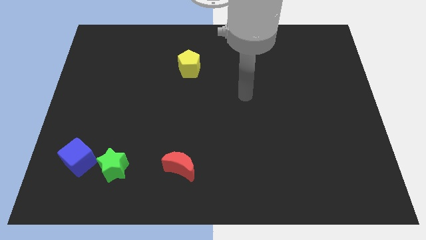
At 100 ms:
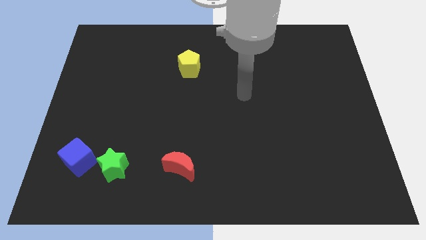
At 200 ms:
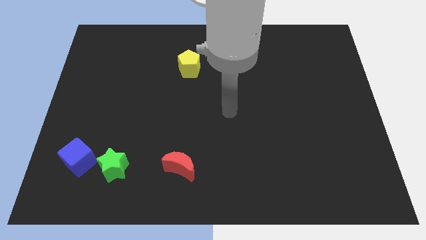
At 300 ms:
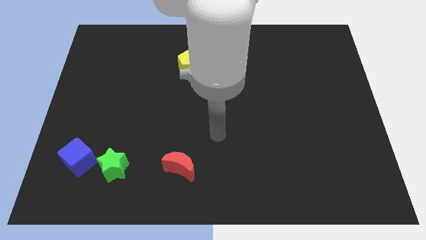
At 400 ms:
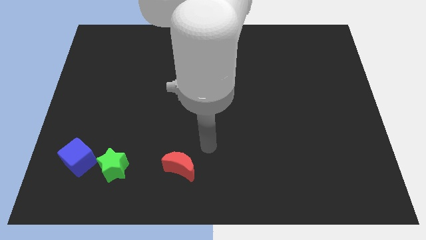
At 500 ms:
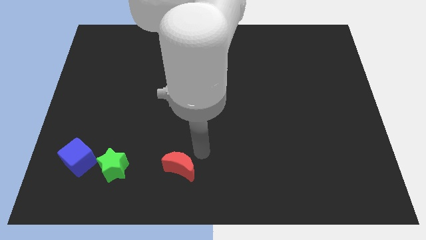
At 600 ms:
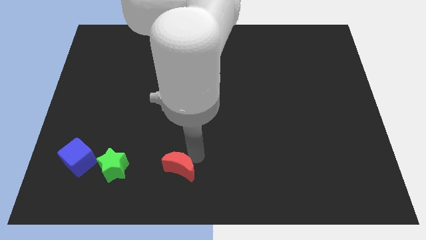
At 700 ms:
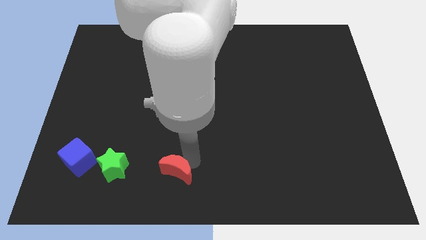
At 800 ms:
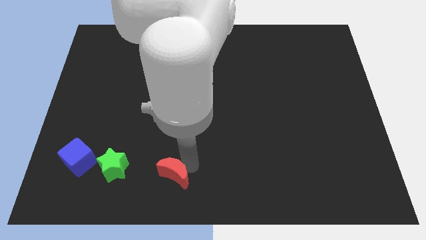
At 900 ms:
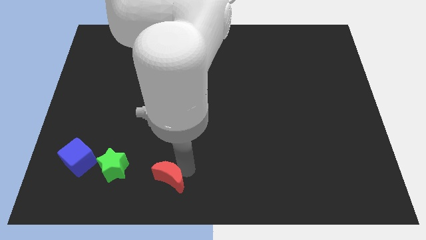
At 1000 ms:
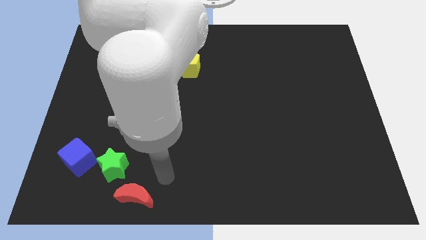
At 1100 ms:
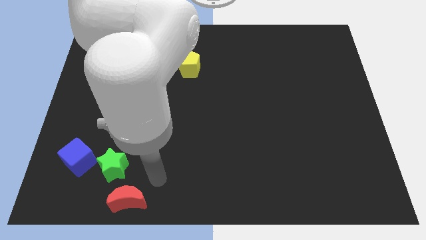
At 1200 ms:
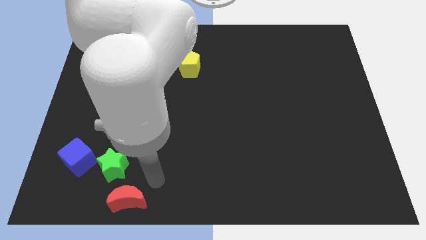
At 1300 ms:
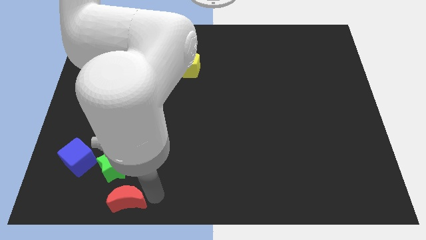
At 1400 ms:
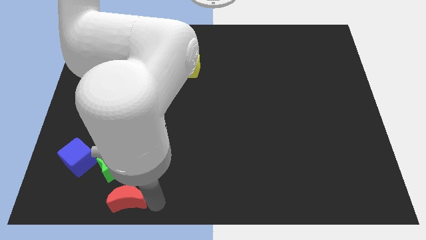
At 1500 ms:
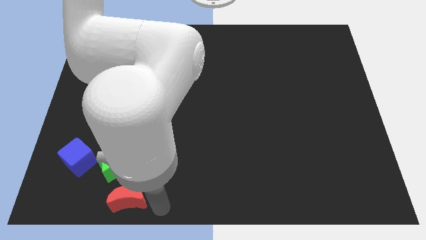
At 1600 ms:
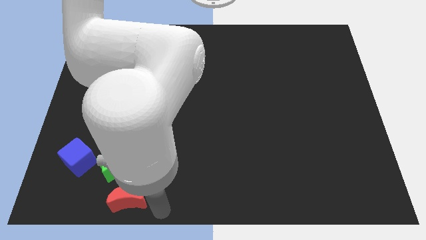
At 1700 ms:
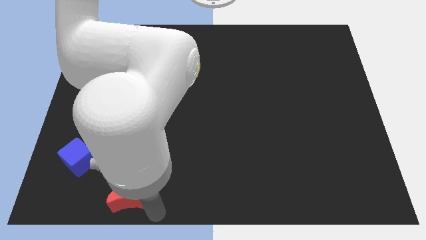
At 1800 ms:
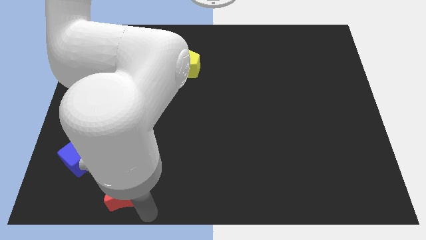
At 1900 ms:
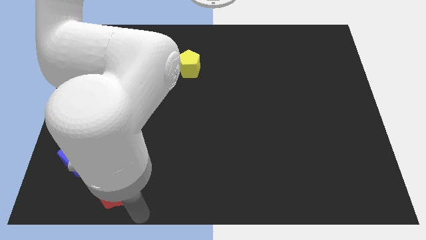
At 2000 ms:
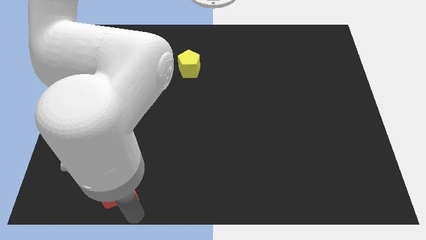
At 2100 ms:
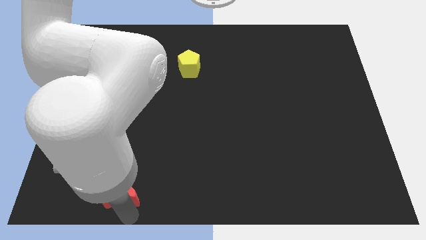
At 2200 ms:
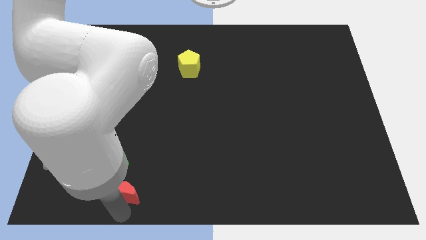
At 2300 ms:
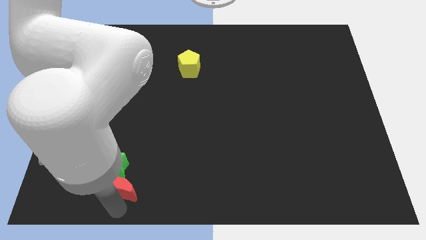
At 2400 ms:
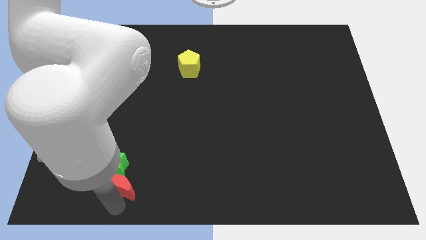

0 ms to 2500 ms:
put the red block next to the star

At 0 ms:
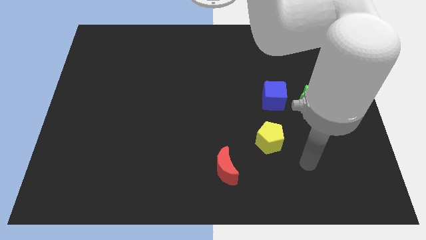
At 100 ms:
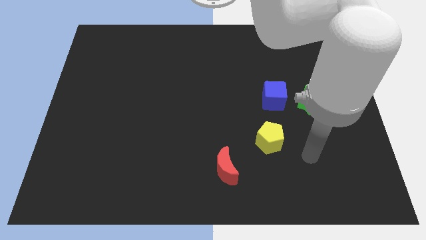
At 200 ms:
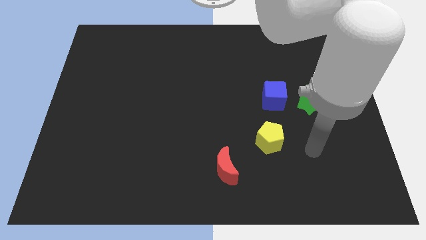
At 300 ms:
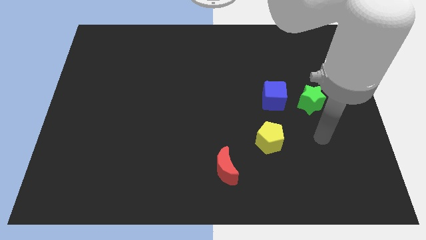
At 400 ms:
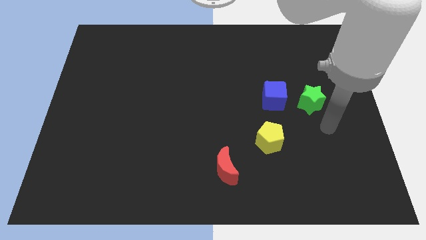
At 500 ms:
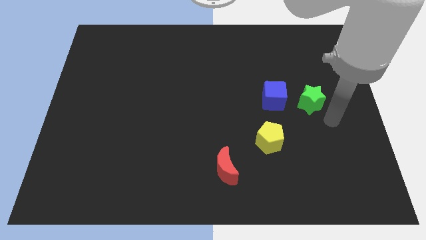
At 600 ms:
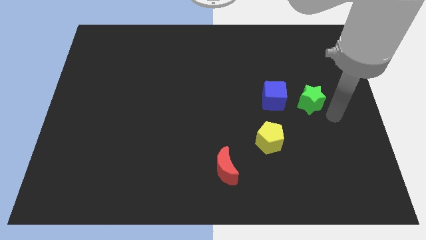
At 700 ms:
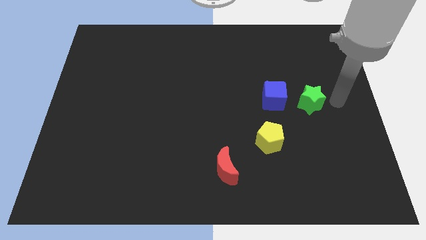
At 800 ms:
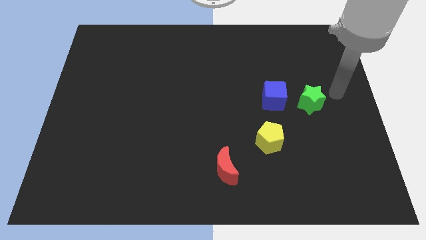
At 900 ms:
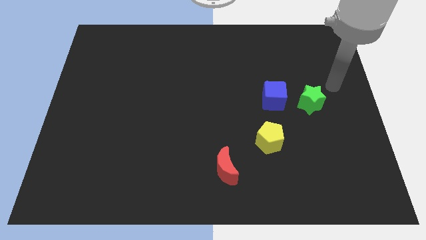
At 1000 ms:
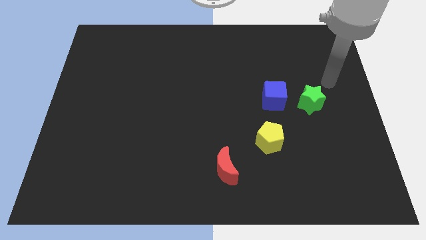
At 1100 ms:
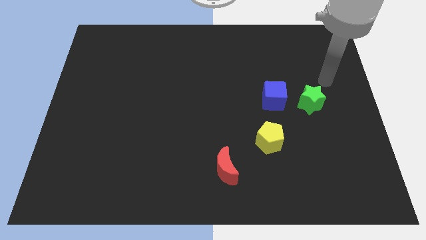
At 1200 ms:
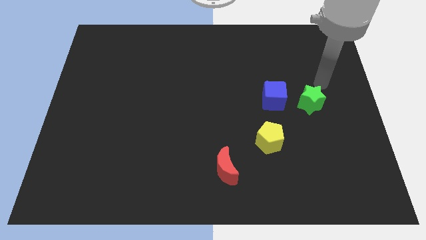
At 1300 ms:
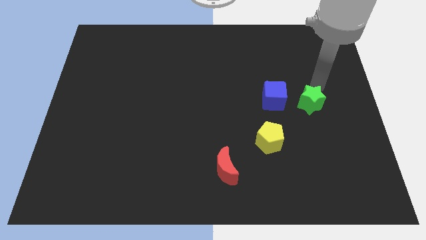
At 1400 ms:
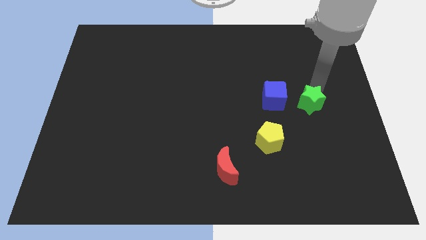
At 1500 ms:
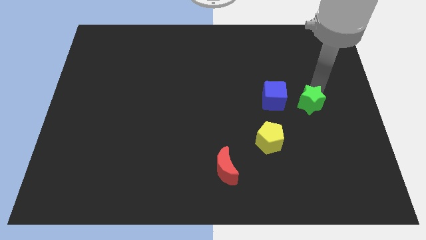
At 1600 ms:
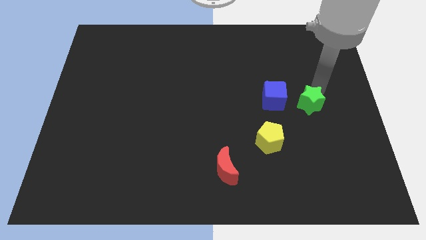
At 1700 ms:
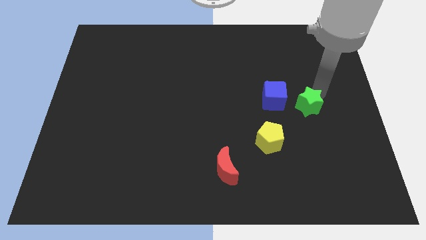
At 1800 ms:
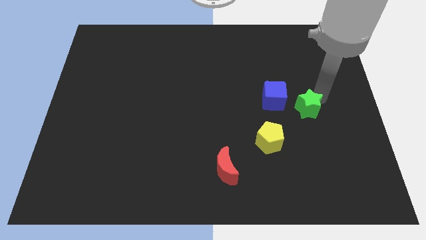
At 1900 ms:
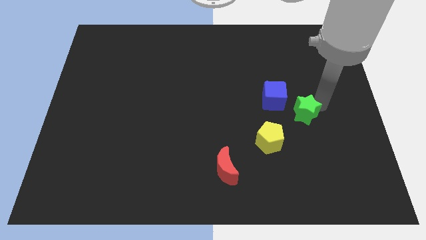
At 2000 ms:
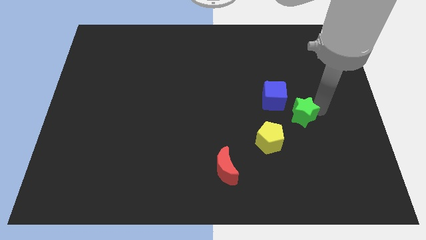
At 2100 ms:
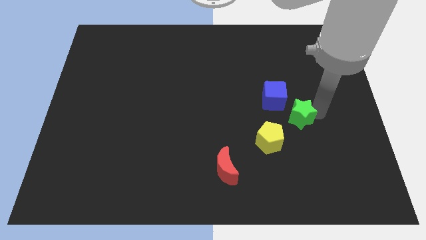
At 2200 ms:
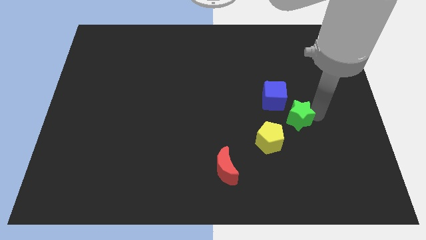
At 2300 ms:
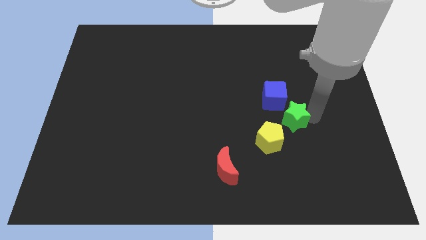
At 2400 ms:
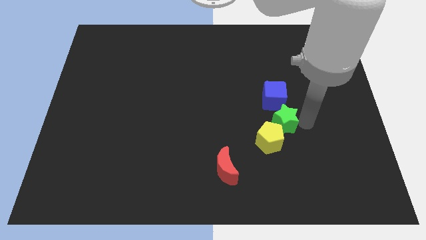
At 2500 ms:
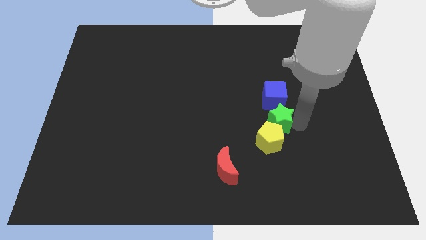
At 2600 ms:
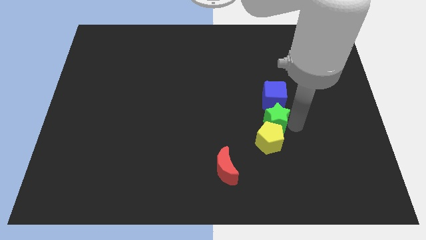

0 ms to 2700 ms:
push the green block towards the yellow block

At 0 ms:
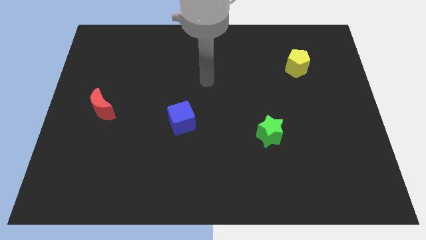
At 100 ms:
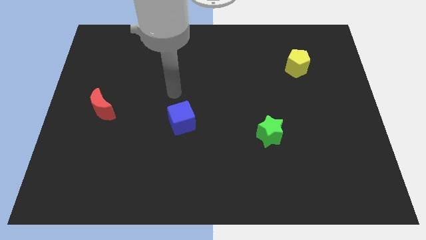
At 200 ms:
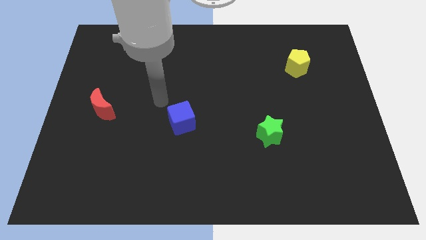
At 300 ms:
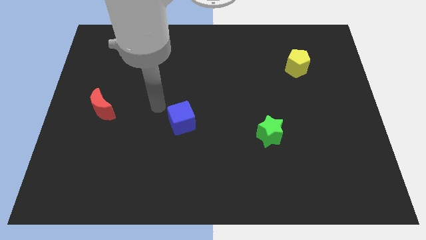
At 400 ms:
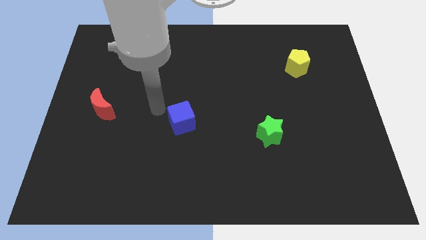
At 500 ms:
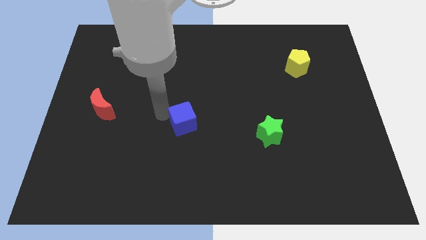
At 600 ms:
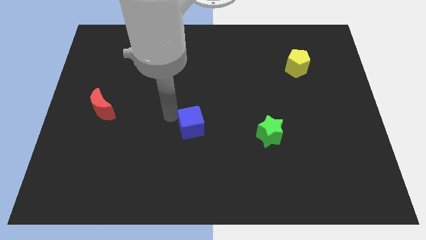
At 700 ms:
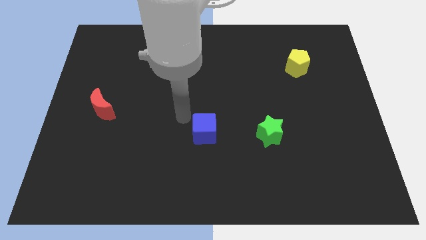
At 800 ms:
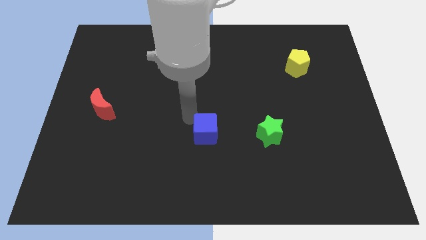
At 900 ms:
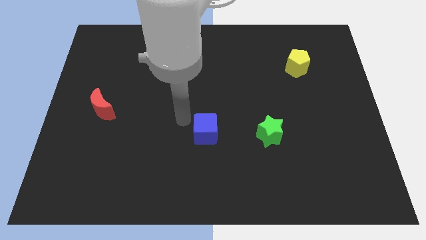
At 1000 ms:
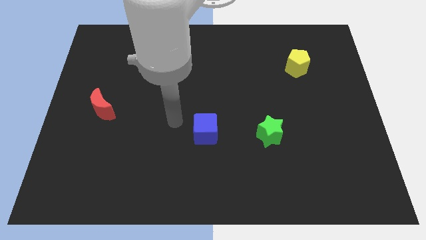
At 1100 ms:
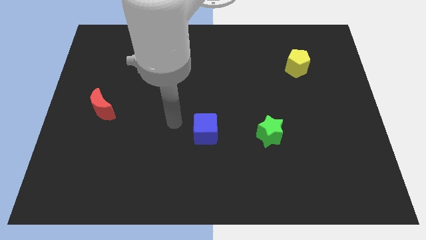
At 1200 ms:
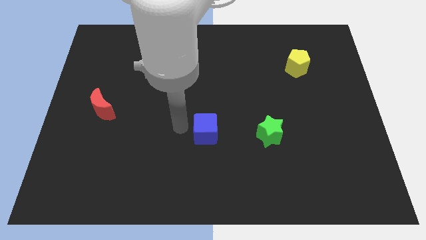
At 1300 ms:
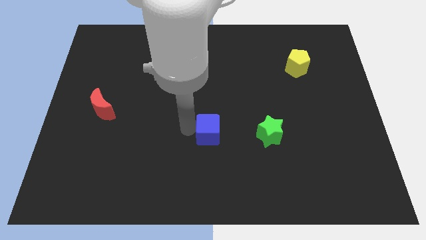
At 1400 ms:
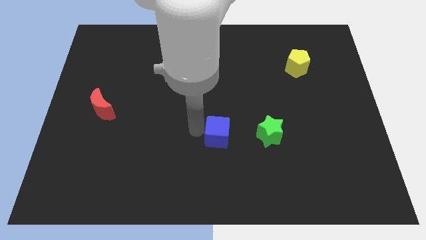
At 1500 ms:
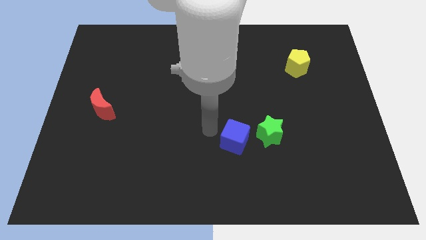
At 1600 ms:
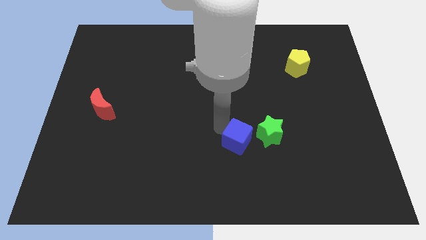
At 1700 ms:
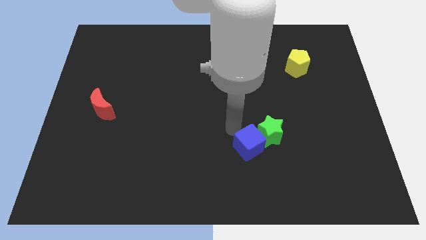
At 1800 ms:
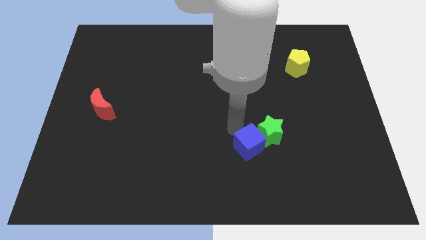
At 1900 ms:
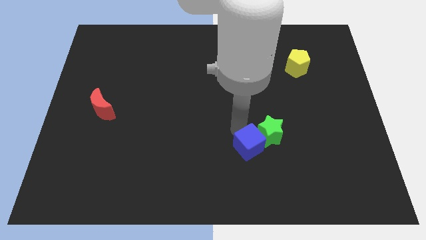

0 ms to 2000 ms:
push the blue cube close to the star

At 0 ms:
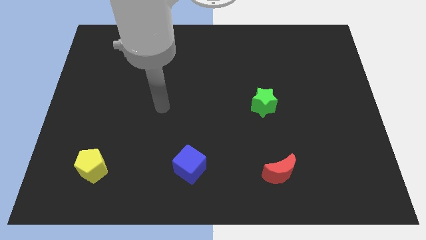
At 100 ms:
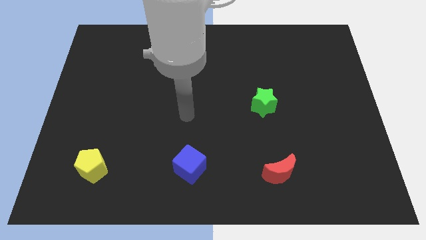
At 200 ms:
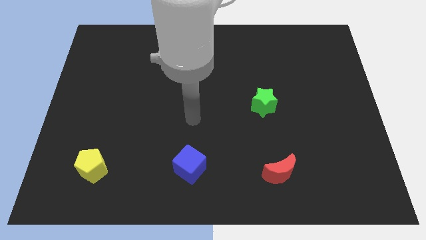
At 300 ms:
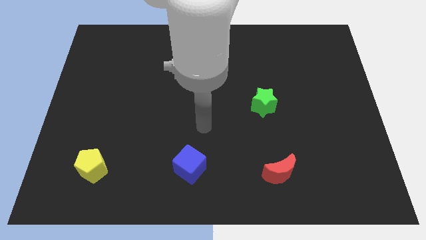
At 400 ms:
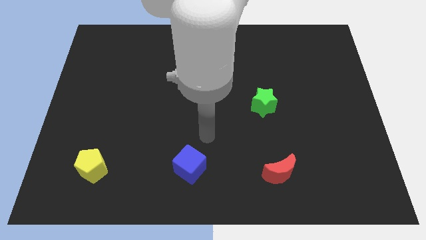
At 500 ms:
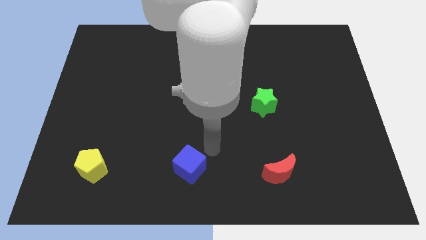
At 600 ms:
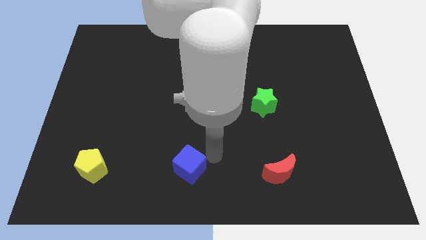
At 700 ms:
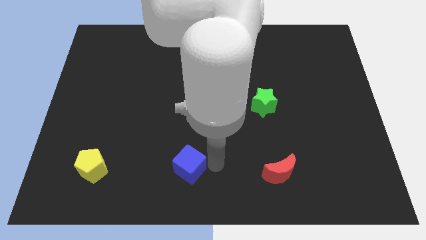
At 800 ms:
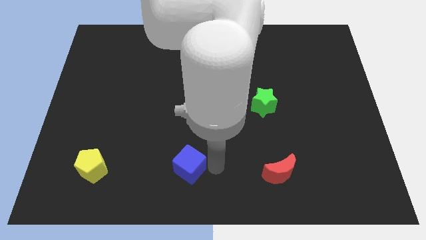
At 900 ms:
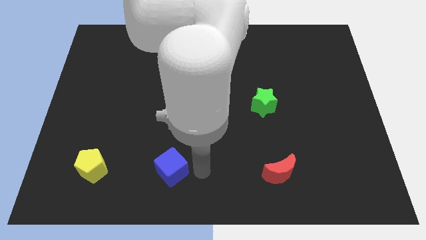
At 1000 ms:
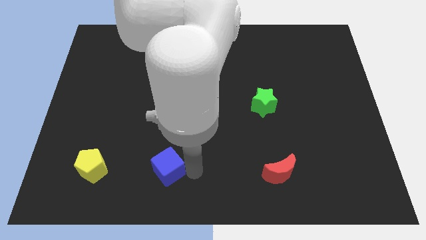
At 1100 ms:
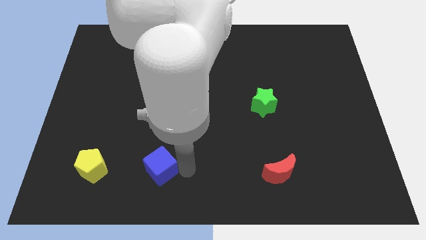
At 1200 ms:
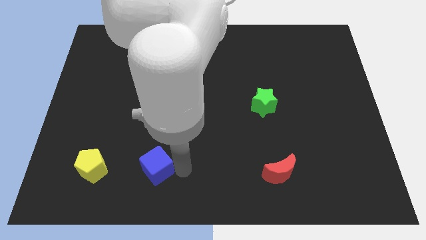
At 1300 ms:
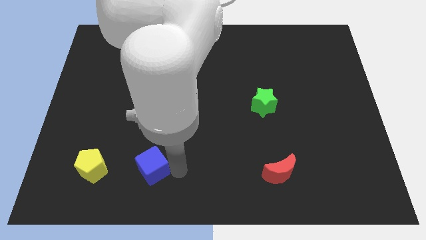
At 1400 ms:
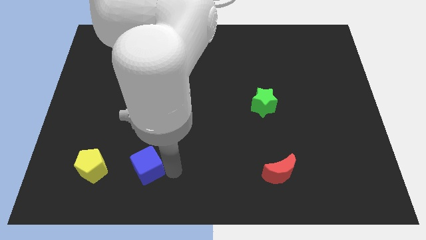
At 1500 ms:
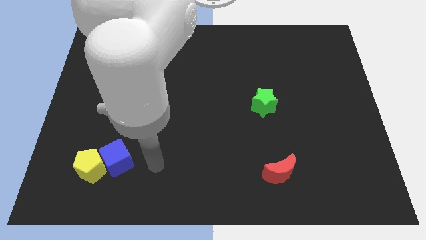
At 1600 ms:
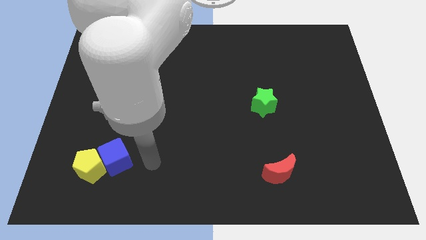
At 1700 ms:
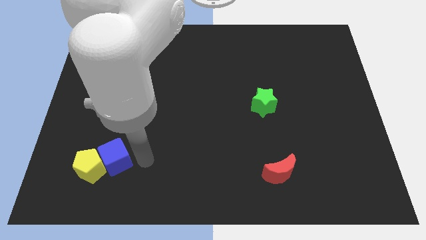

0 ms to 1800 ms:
slide the blue block towards the pentagon
